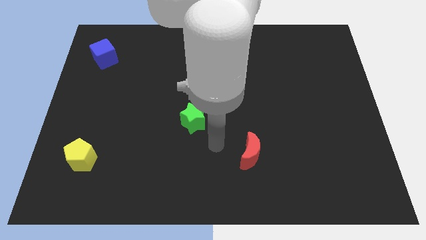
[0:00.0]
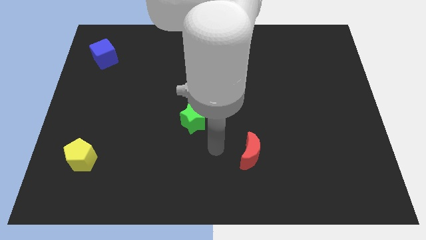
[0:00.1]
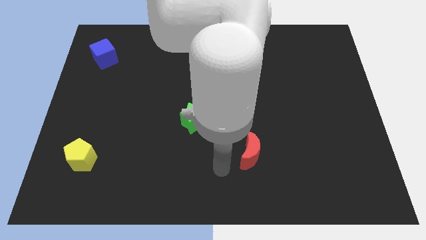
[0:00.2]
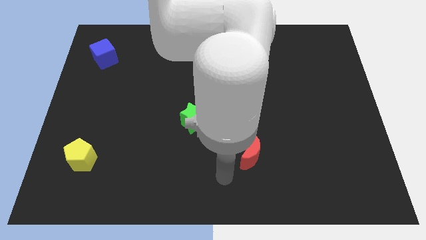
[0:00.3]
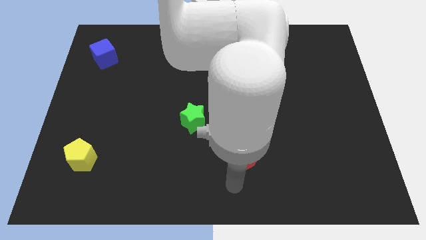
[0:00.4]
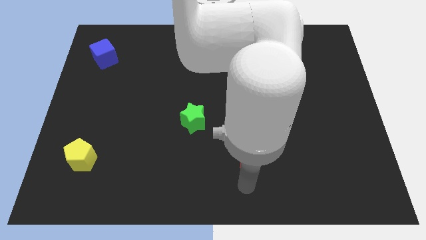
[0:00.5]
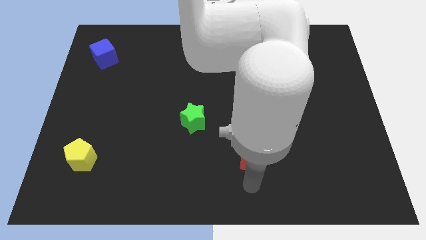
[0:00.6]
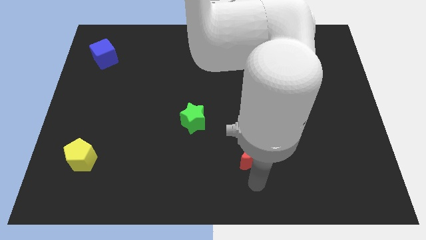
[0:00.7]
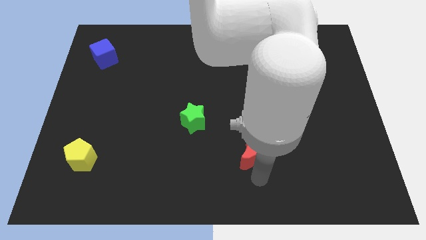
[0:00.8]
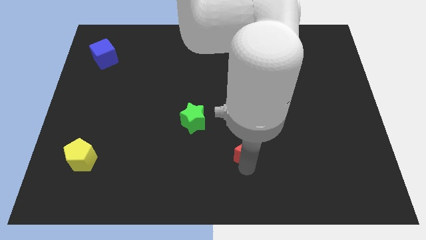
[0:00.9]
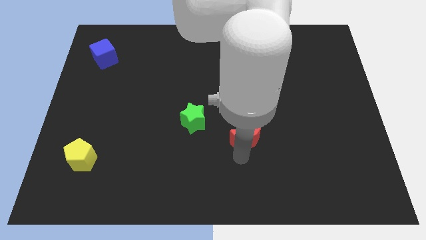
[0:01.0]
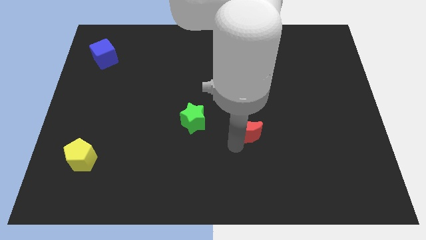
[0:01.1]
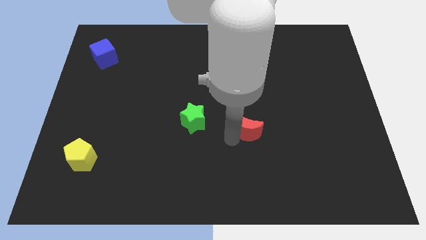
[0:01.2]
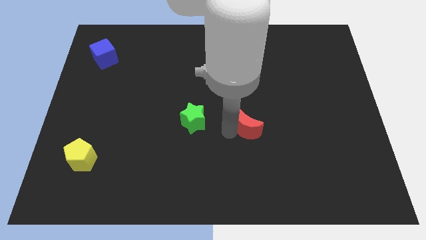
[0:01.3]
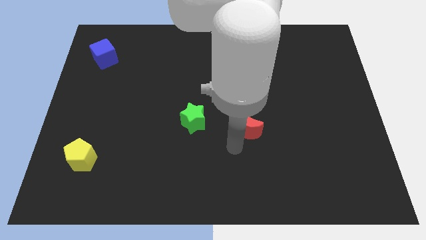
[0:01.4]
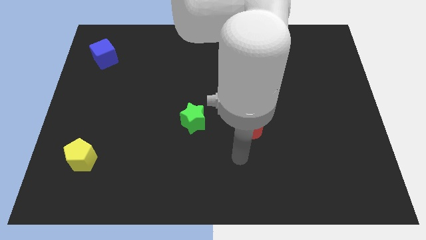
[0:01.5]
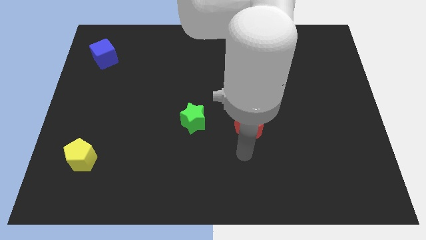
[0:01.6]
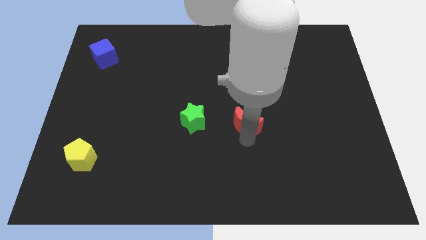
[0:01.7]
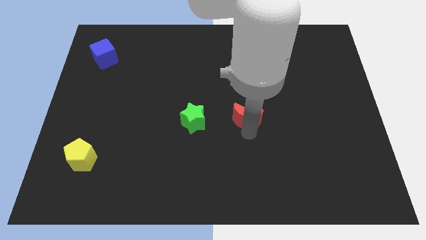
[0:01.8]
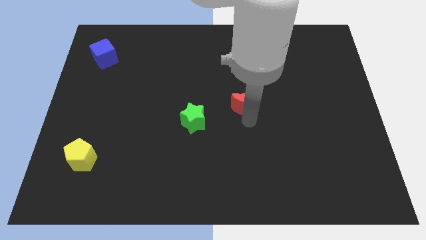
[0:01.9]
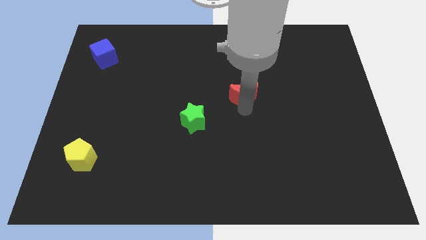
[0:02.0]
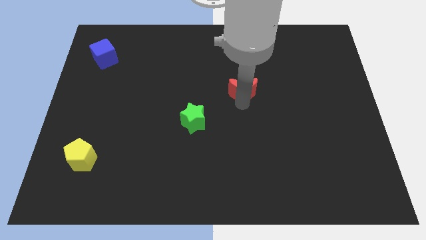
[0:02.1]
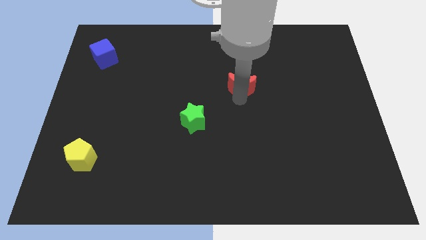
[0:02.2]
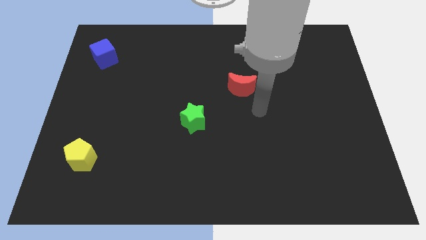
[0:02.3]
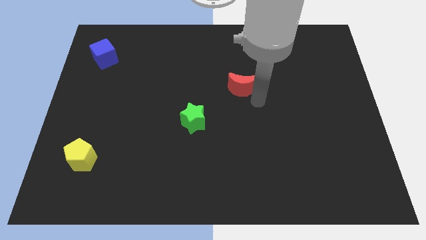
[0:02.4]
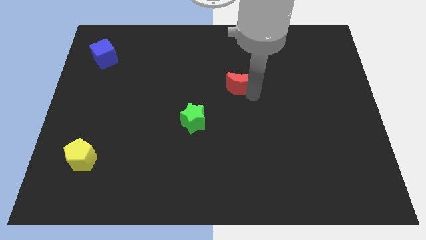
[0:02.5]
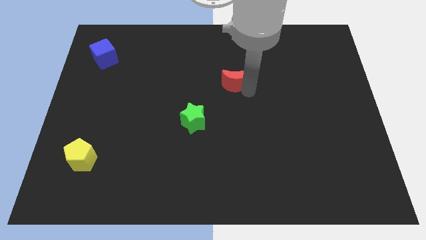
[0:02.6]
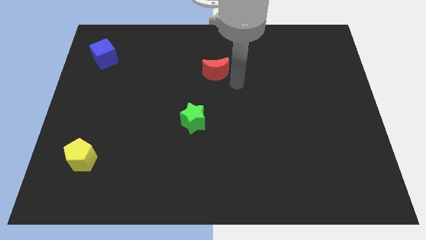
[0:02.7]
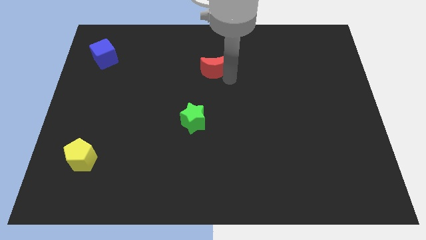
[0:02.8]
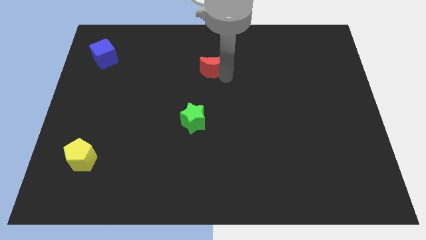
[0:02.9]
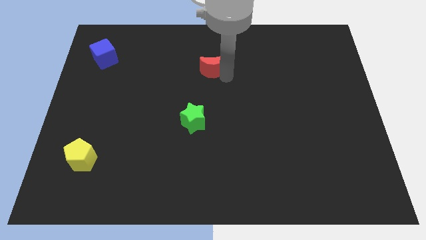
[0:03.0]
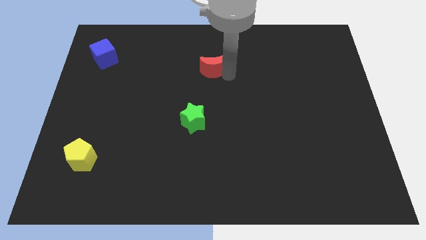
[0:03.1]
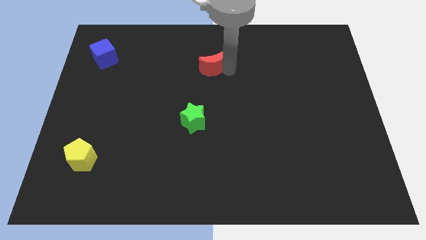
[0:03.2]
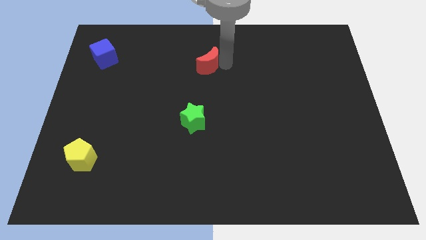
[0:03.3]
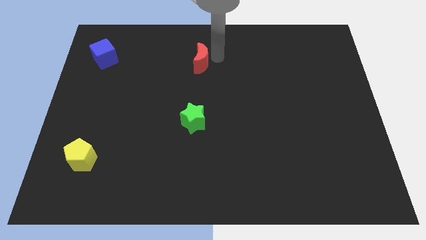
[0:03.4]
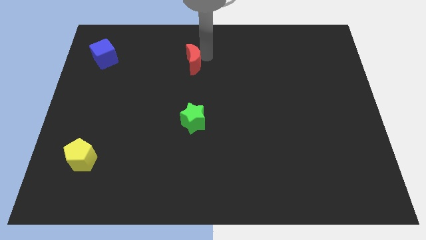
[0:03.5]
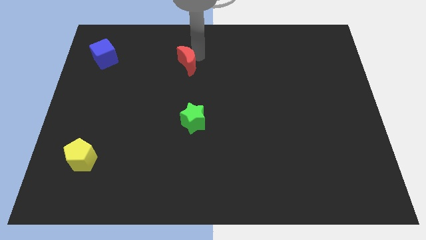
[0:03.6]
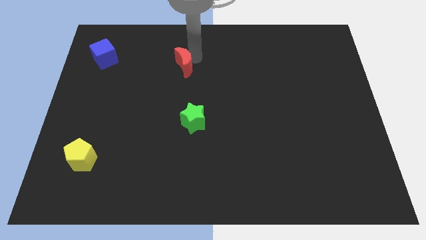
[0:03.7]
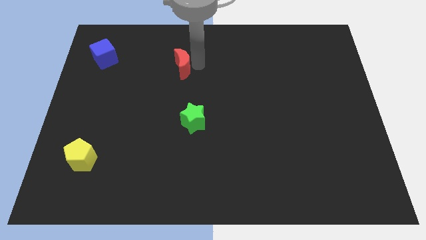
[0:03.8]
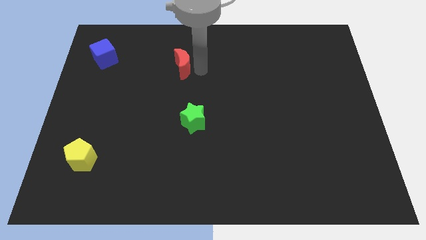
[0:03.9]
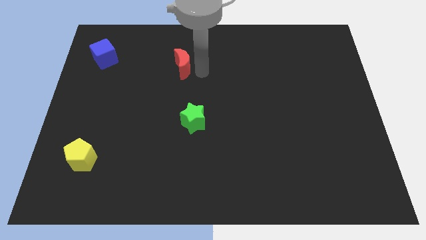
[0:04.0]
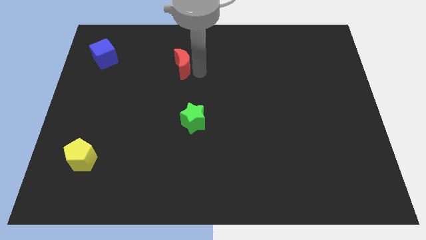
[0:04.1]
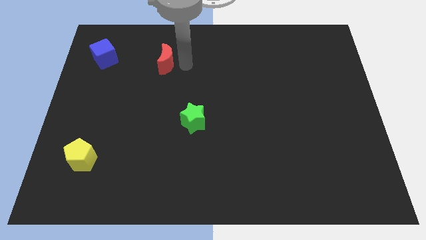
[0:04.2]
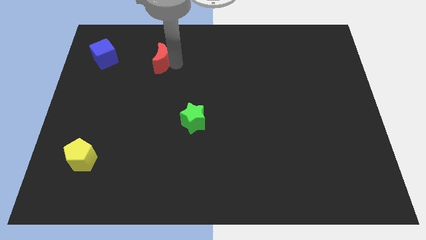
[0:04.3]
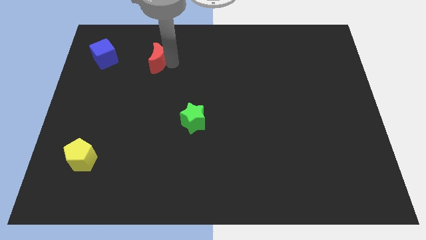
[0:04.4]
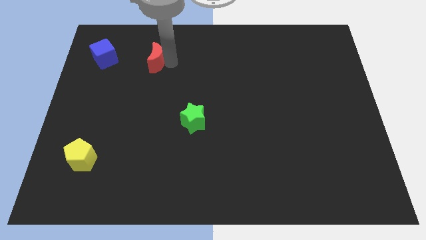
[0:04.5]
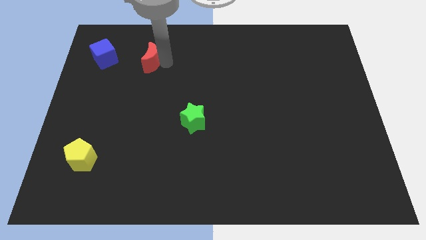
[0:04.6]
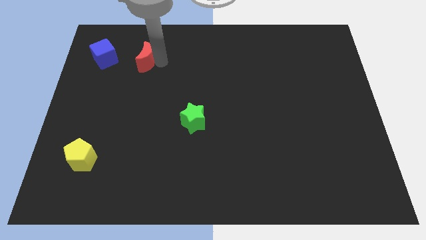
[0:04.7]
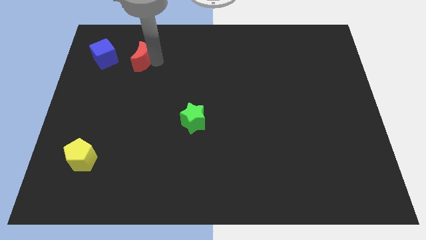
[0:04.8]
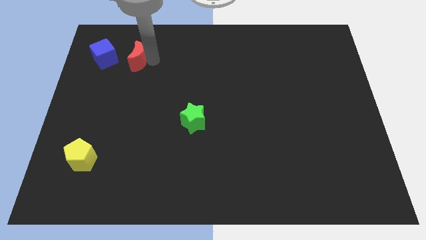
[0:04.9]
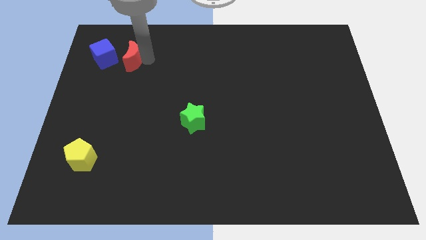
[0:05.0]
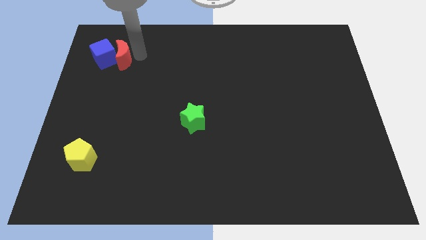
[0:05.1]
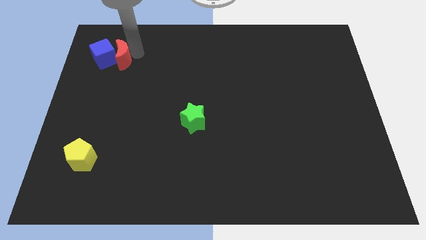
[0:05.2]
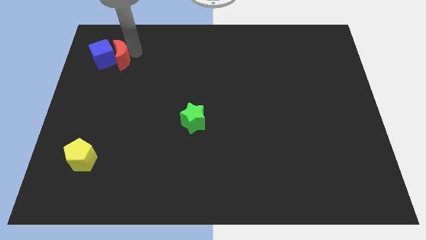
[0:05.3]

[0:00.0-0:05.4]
push the red block next to the blue cube

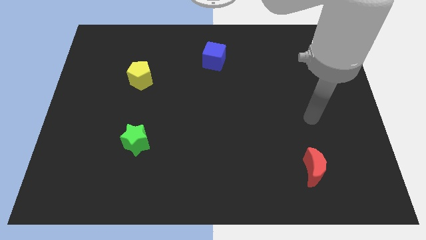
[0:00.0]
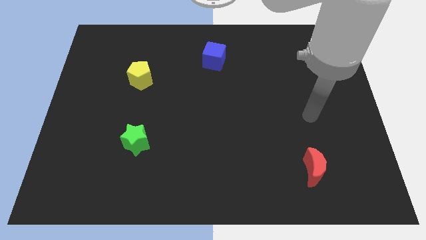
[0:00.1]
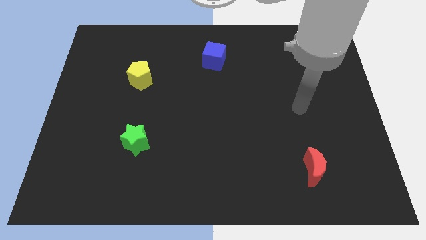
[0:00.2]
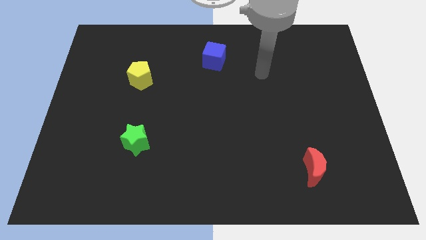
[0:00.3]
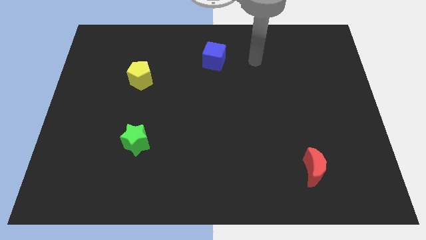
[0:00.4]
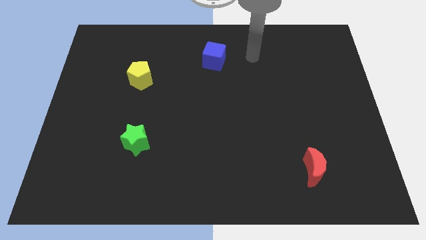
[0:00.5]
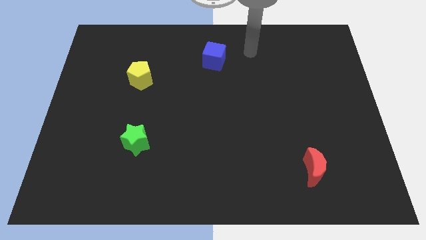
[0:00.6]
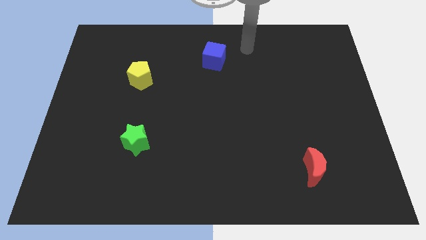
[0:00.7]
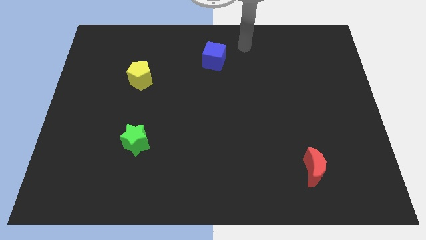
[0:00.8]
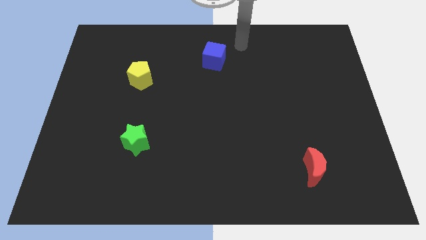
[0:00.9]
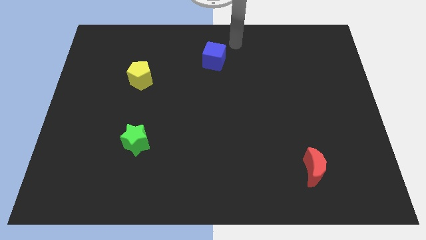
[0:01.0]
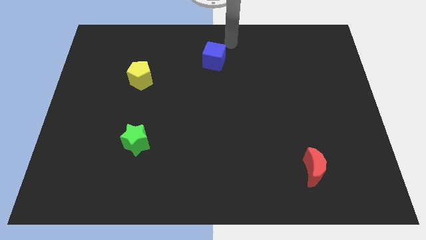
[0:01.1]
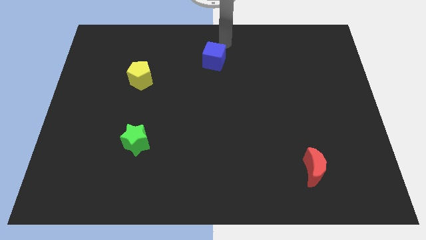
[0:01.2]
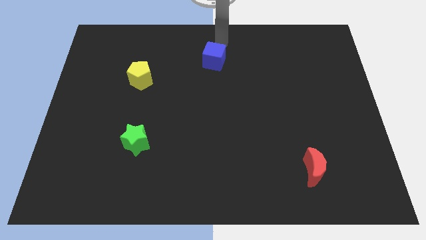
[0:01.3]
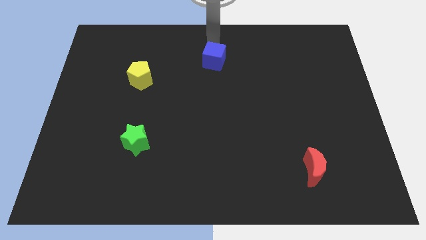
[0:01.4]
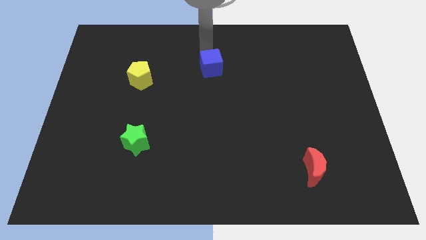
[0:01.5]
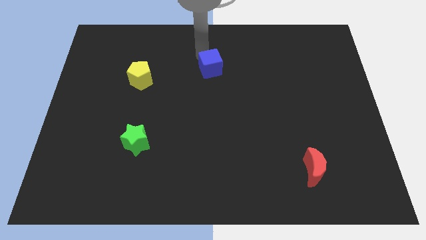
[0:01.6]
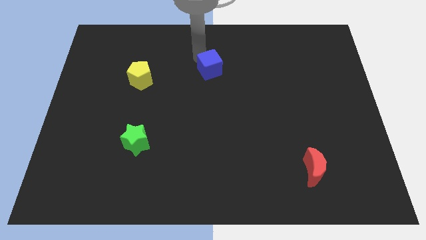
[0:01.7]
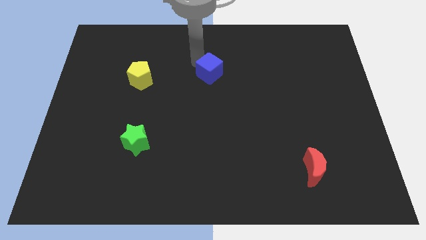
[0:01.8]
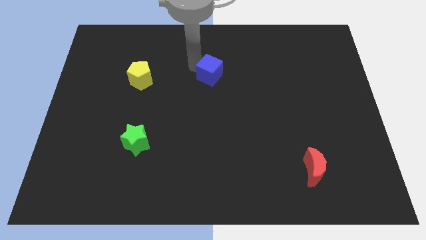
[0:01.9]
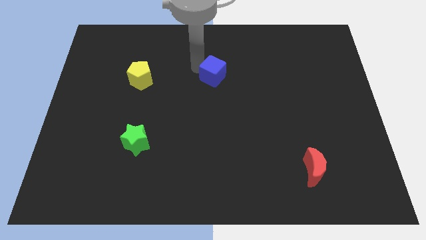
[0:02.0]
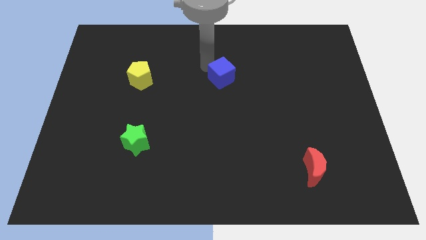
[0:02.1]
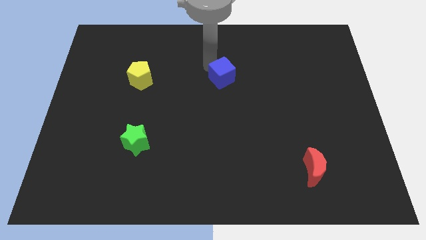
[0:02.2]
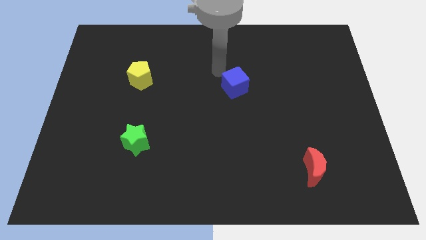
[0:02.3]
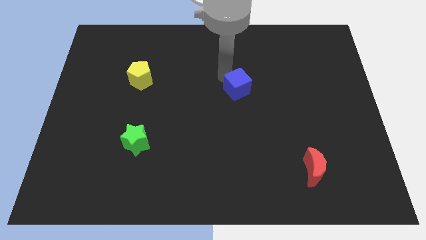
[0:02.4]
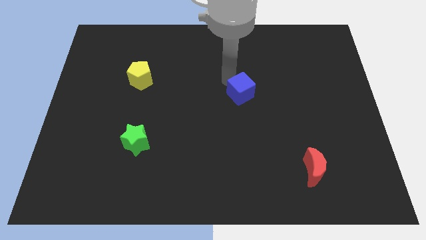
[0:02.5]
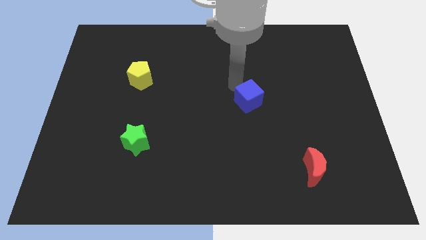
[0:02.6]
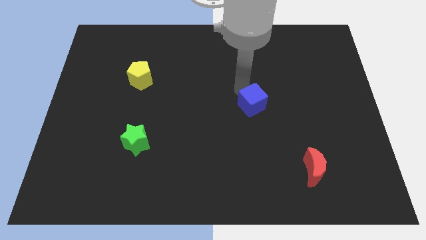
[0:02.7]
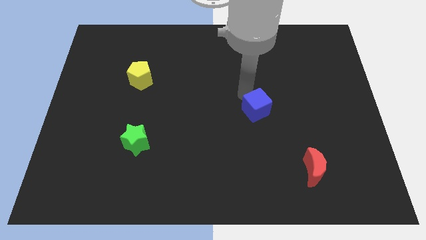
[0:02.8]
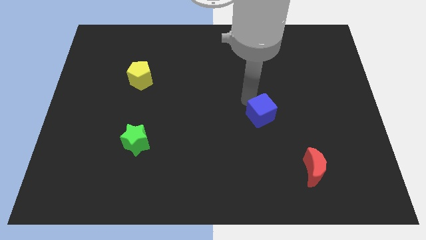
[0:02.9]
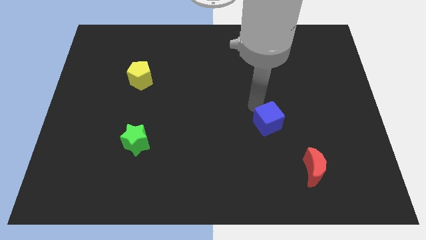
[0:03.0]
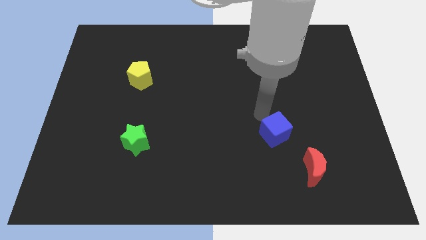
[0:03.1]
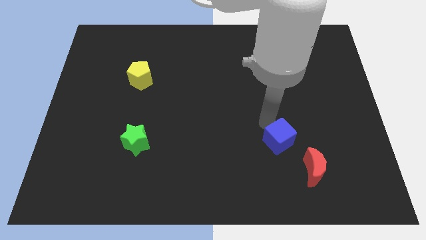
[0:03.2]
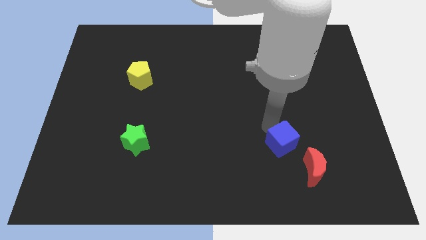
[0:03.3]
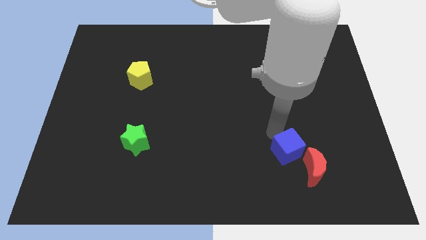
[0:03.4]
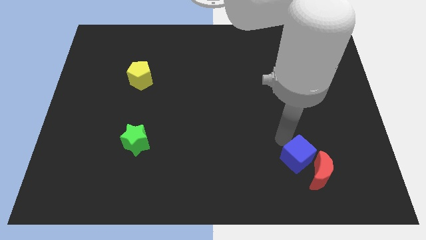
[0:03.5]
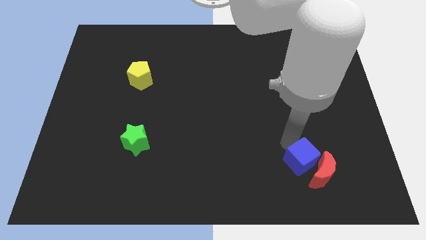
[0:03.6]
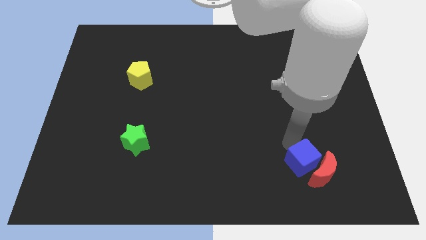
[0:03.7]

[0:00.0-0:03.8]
move the blue cube close to the red block
